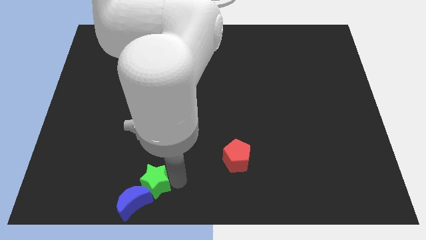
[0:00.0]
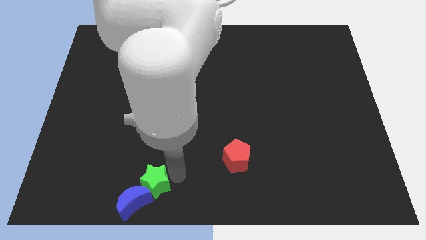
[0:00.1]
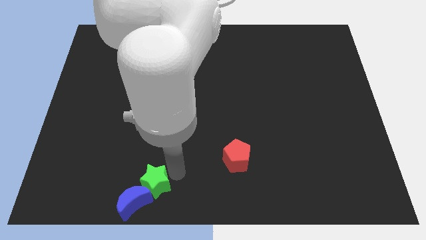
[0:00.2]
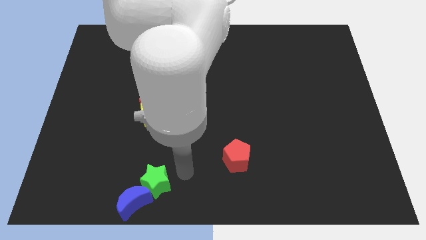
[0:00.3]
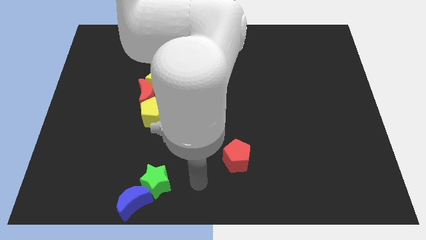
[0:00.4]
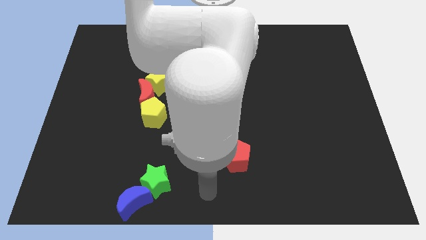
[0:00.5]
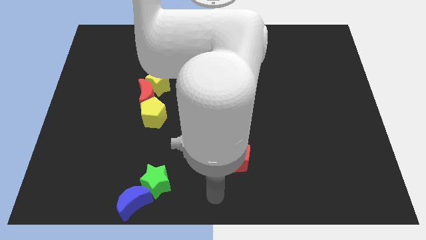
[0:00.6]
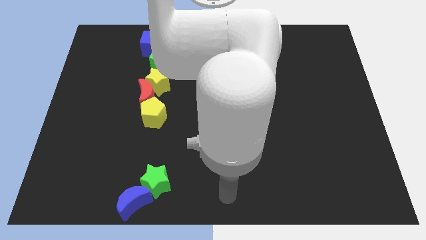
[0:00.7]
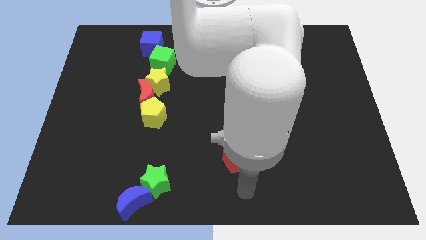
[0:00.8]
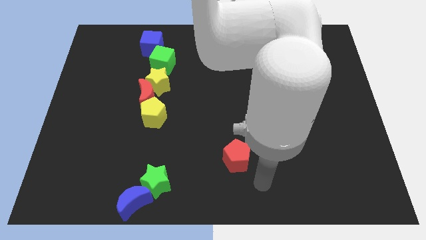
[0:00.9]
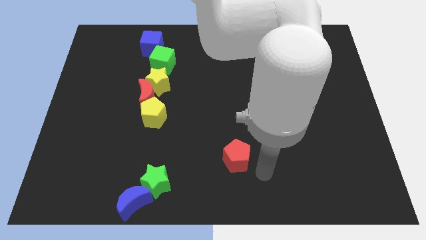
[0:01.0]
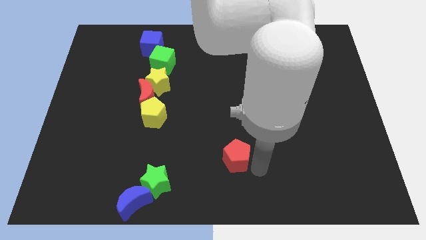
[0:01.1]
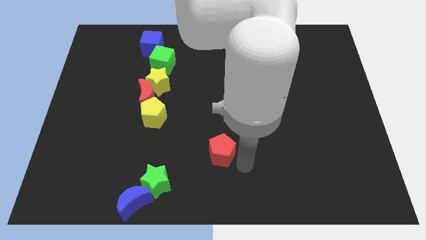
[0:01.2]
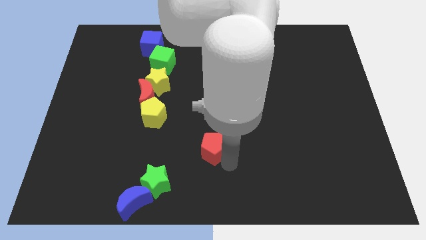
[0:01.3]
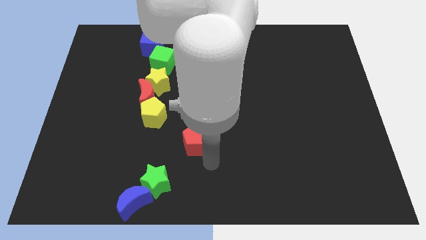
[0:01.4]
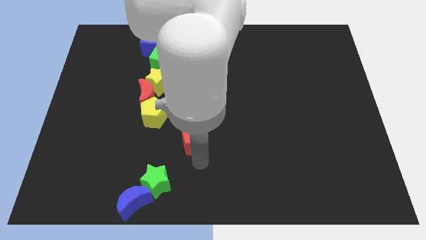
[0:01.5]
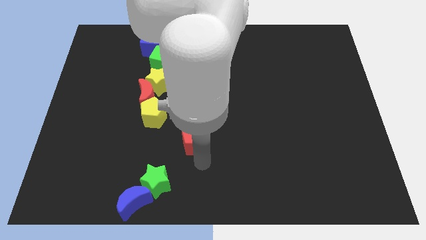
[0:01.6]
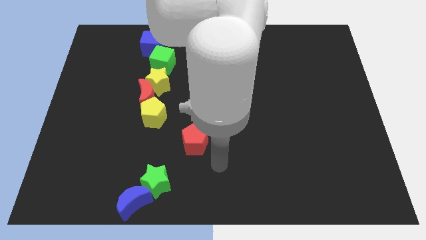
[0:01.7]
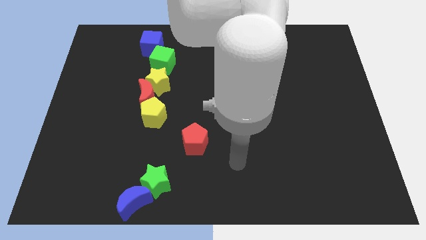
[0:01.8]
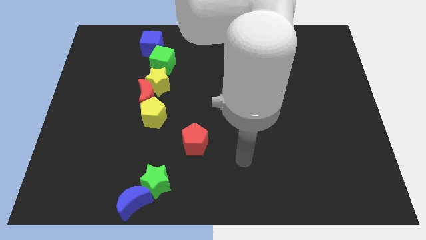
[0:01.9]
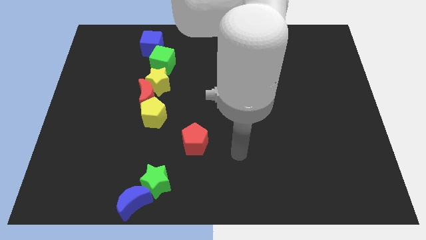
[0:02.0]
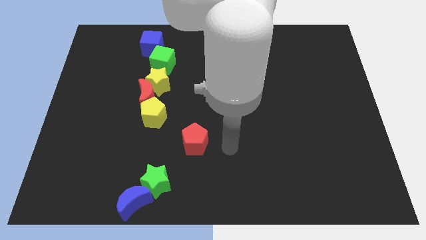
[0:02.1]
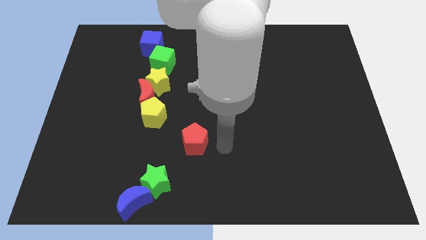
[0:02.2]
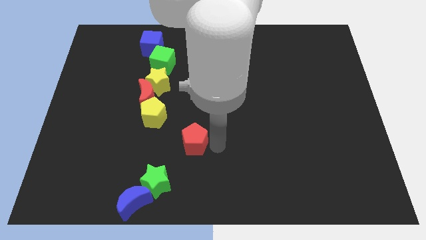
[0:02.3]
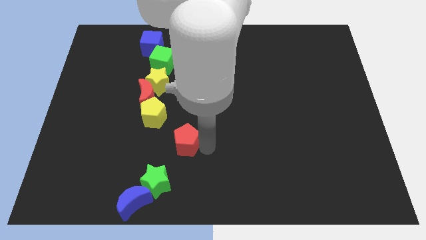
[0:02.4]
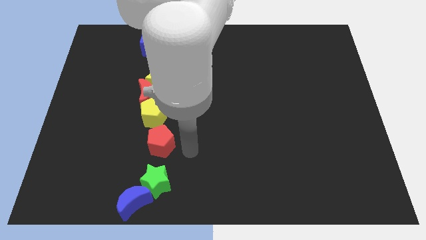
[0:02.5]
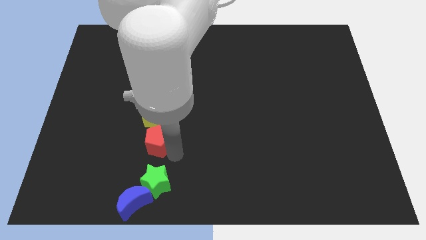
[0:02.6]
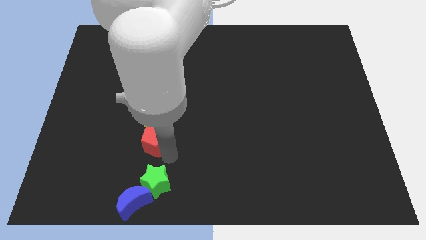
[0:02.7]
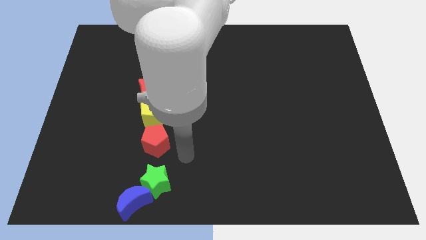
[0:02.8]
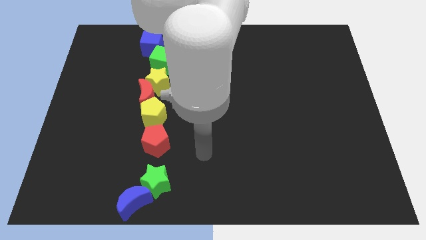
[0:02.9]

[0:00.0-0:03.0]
push the red pentagon to the top of the green star

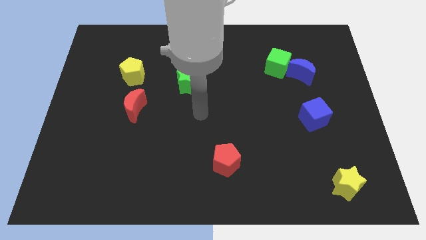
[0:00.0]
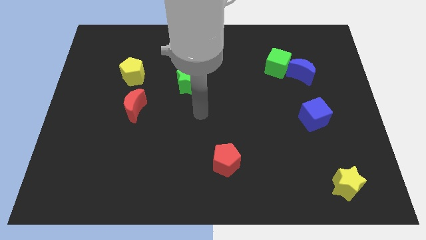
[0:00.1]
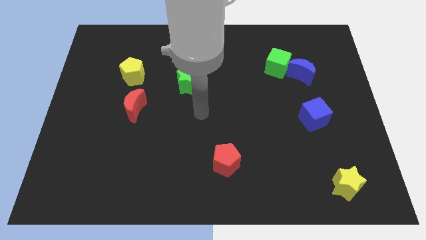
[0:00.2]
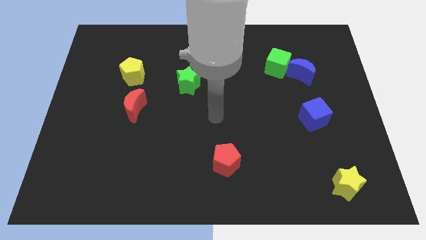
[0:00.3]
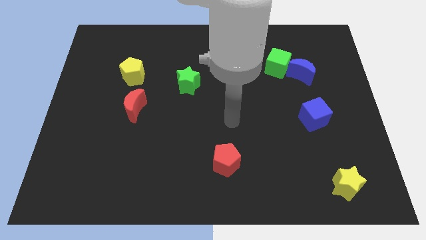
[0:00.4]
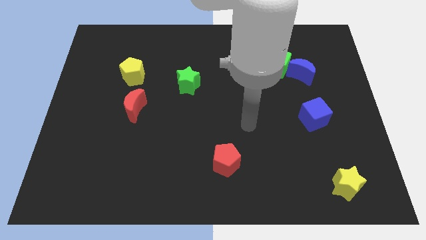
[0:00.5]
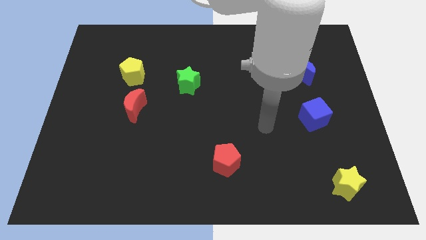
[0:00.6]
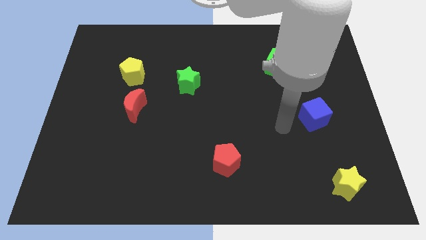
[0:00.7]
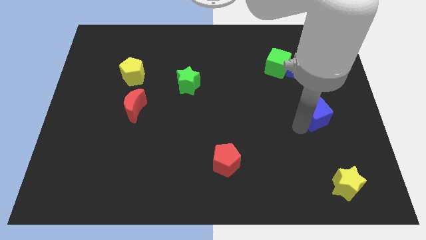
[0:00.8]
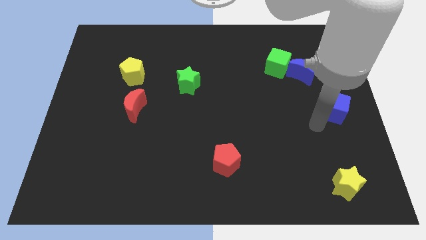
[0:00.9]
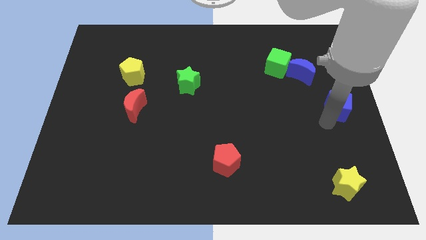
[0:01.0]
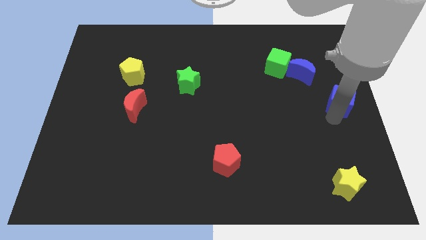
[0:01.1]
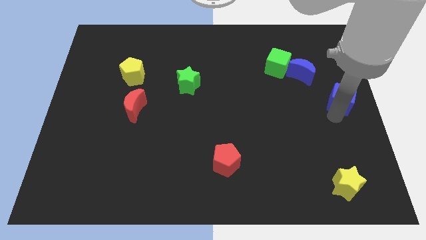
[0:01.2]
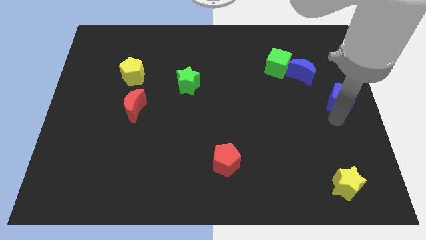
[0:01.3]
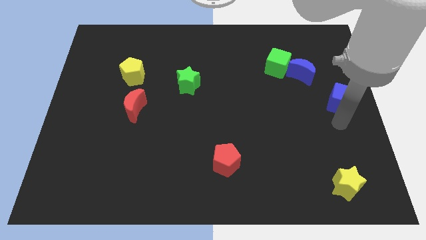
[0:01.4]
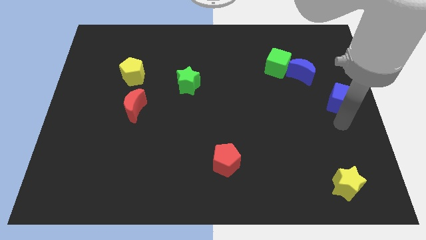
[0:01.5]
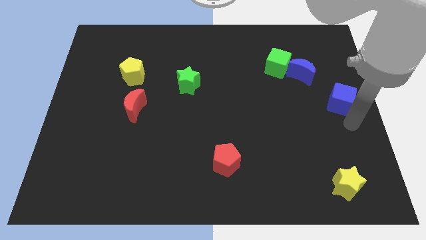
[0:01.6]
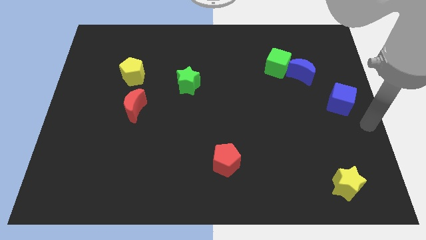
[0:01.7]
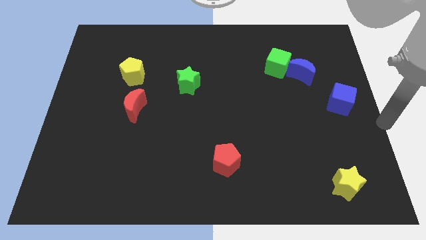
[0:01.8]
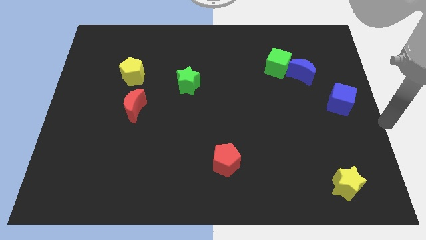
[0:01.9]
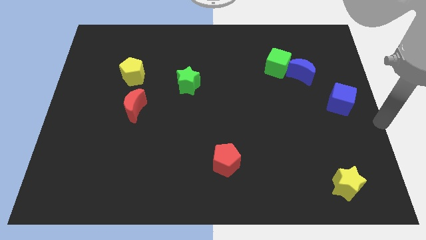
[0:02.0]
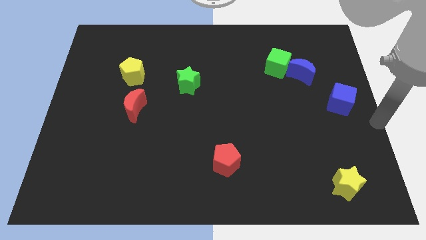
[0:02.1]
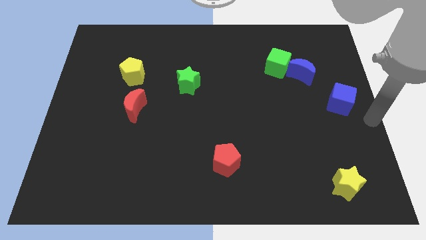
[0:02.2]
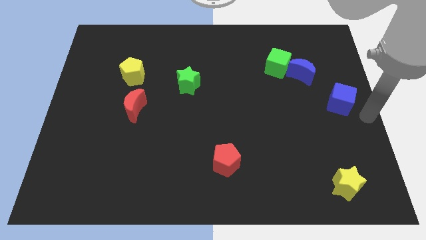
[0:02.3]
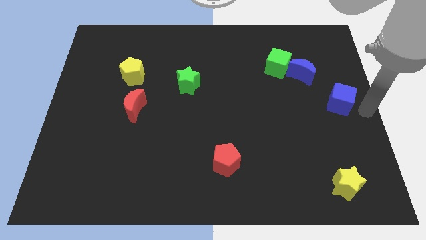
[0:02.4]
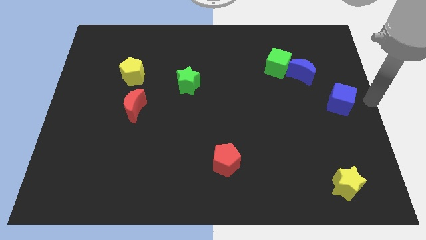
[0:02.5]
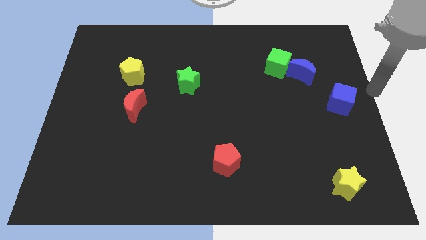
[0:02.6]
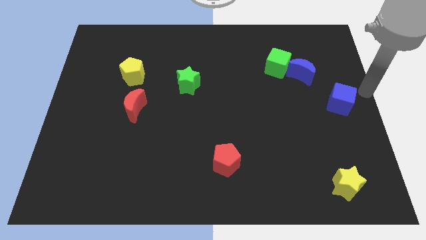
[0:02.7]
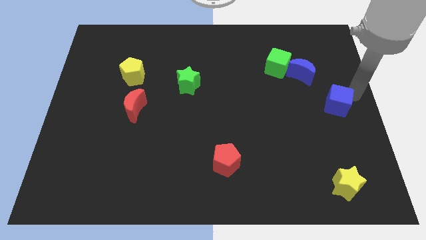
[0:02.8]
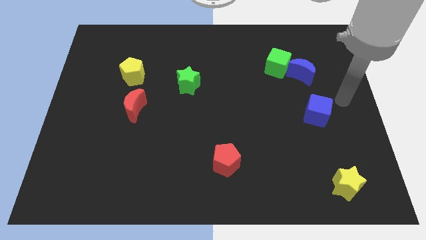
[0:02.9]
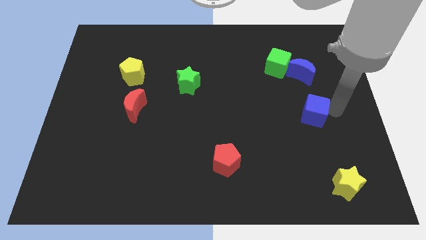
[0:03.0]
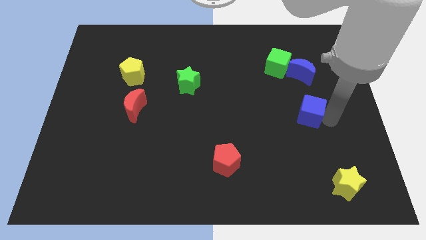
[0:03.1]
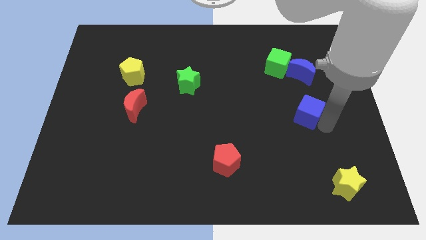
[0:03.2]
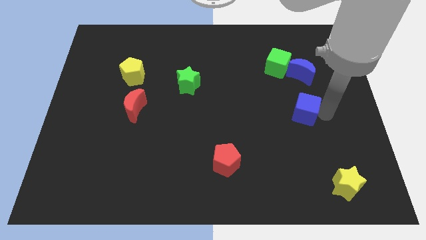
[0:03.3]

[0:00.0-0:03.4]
push the blue cube to the left side

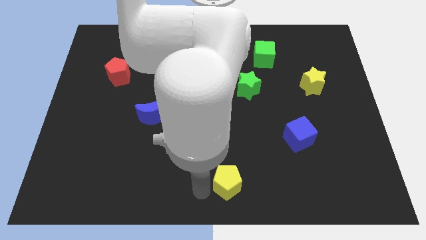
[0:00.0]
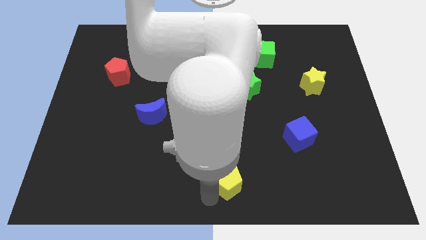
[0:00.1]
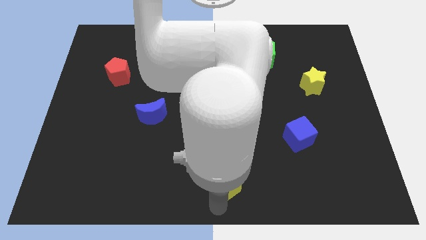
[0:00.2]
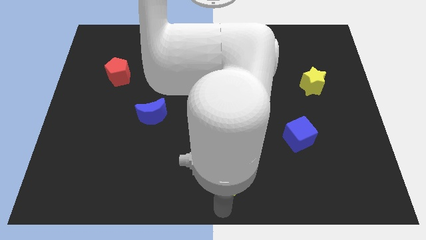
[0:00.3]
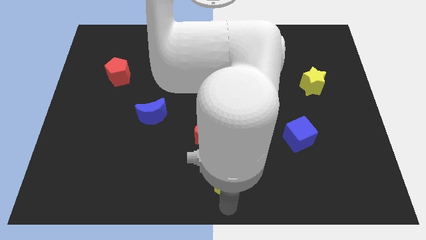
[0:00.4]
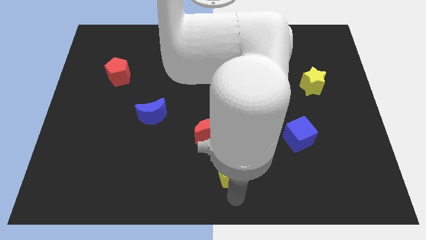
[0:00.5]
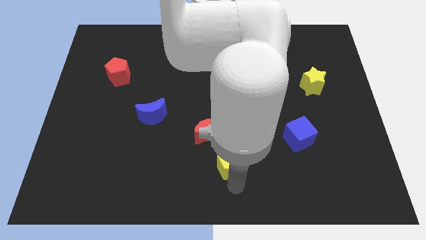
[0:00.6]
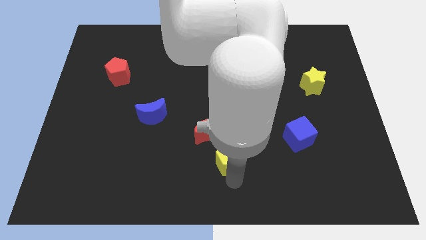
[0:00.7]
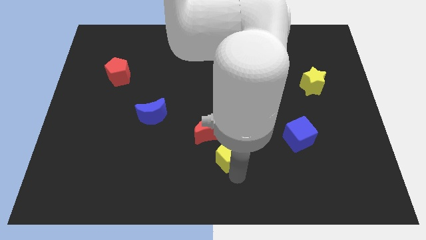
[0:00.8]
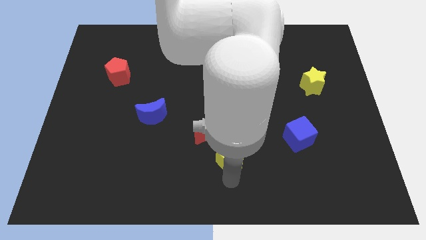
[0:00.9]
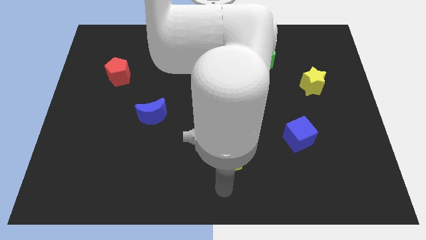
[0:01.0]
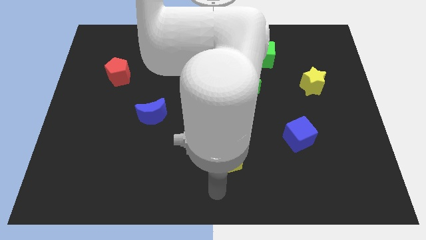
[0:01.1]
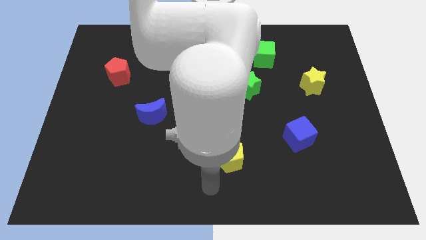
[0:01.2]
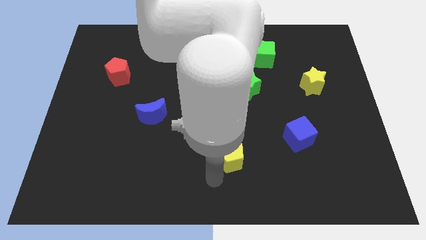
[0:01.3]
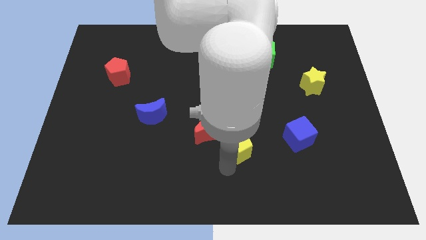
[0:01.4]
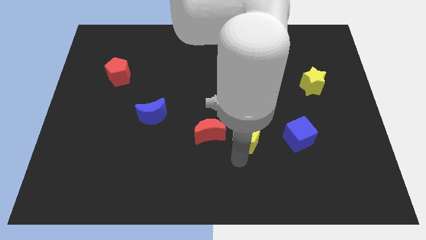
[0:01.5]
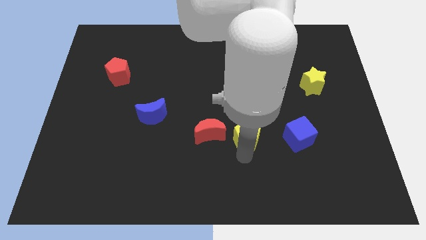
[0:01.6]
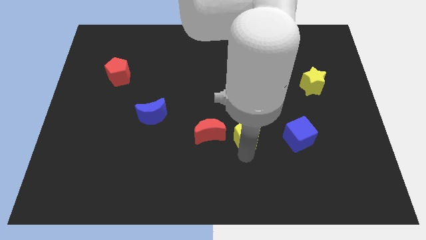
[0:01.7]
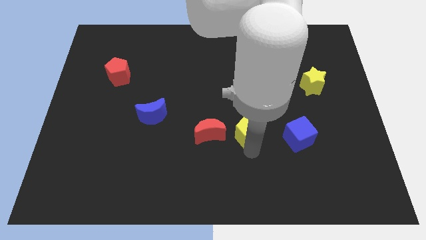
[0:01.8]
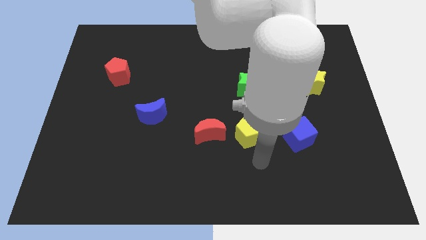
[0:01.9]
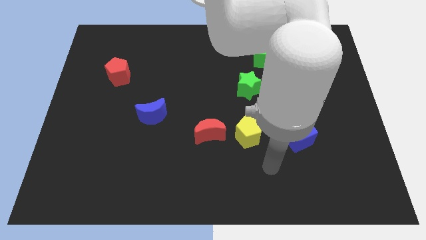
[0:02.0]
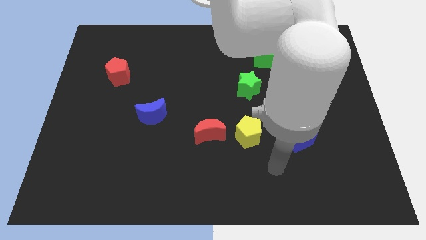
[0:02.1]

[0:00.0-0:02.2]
place the yellow pentagon right to the red moon

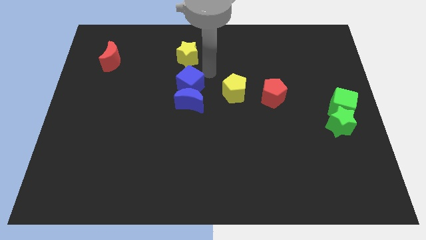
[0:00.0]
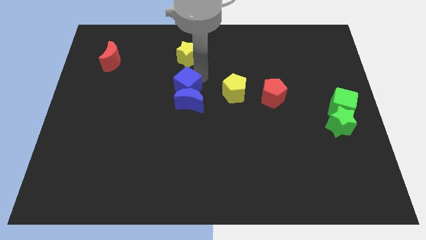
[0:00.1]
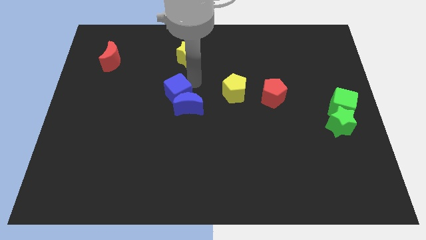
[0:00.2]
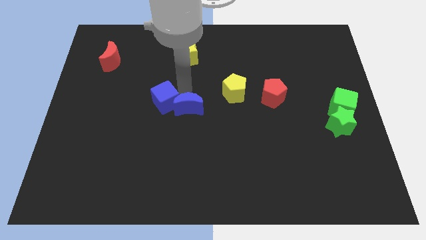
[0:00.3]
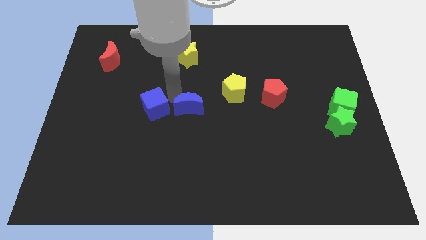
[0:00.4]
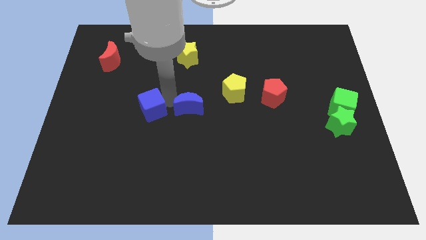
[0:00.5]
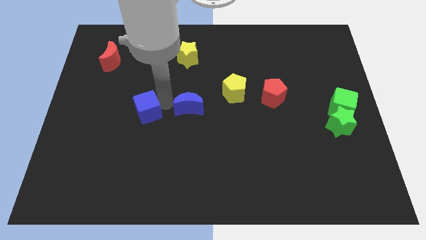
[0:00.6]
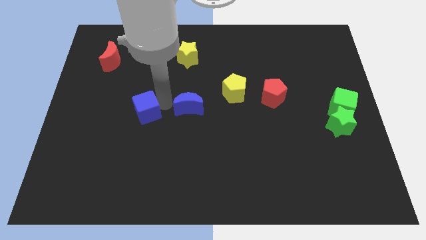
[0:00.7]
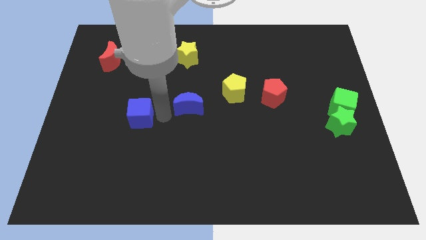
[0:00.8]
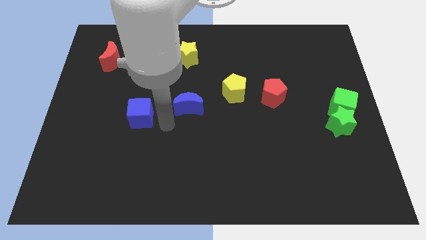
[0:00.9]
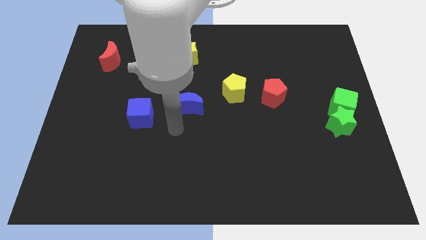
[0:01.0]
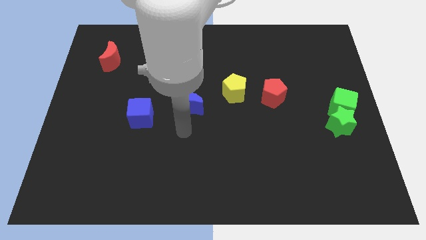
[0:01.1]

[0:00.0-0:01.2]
separate the blue cube from the blue crescent
